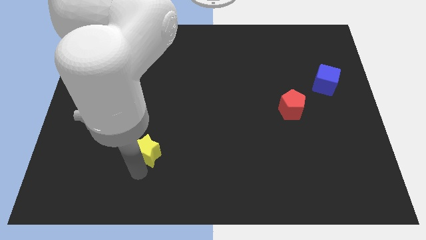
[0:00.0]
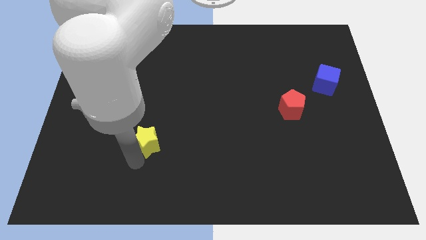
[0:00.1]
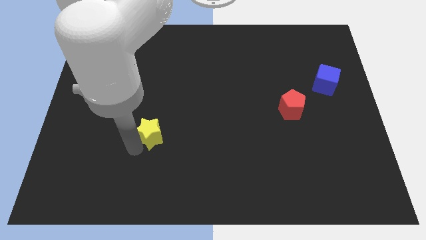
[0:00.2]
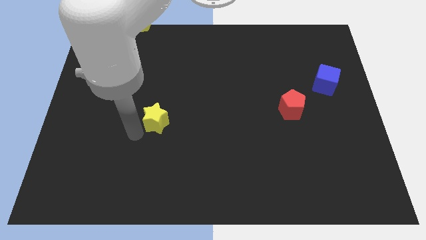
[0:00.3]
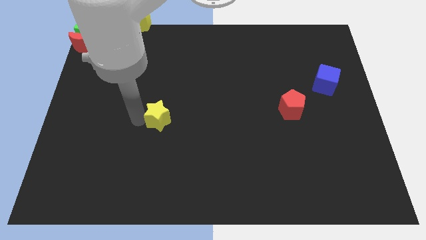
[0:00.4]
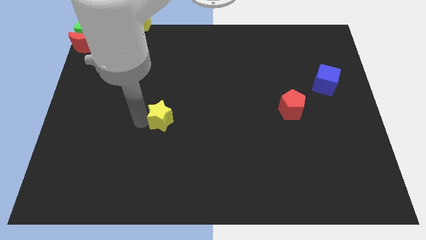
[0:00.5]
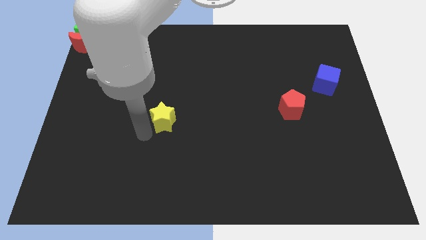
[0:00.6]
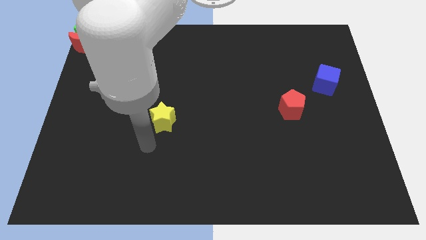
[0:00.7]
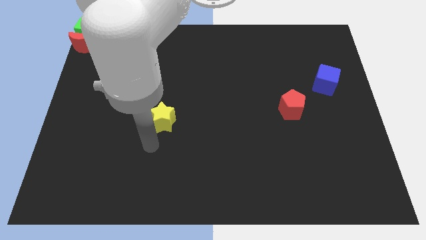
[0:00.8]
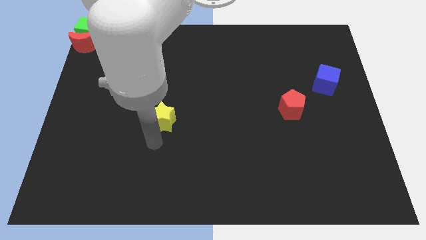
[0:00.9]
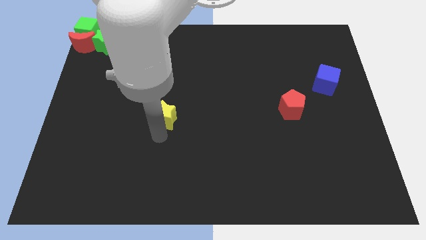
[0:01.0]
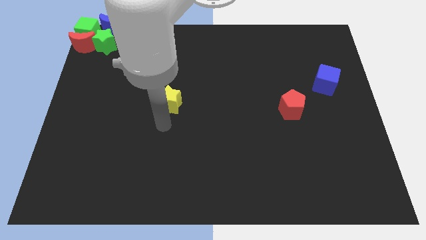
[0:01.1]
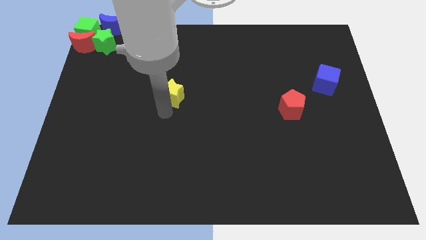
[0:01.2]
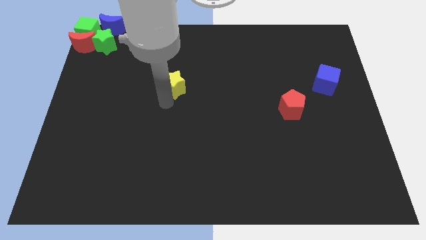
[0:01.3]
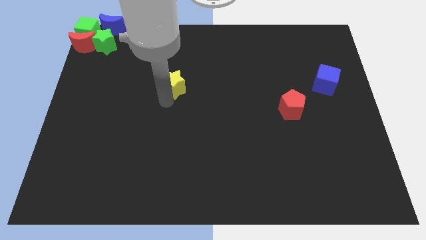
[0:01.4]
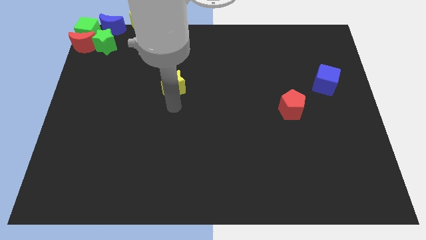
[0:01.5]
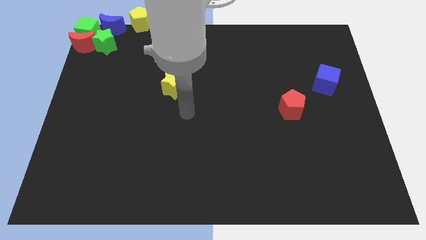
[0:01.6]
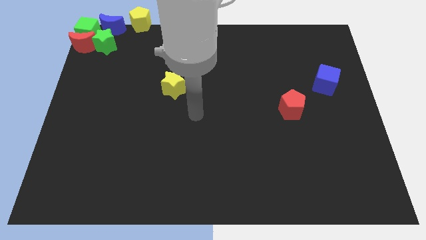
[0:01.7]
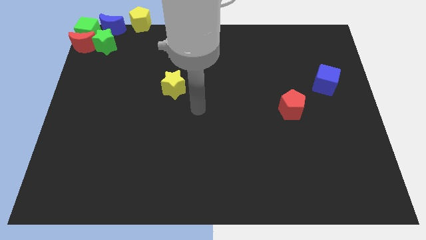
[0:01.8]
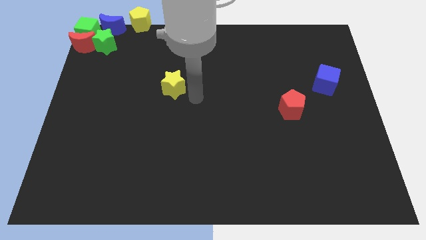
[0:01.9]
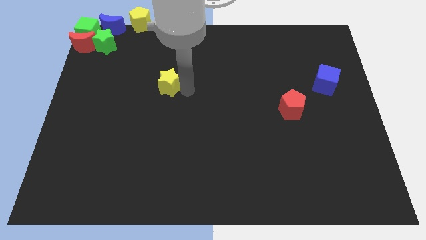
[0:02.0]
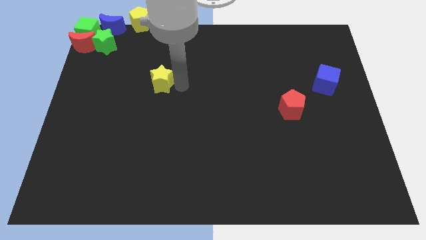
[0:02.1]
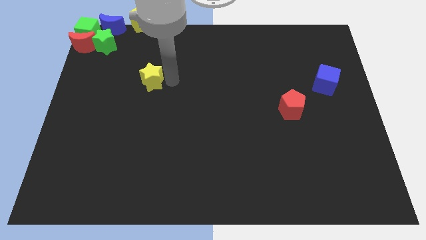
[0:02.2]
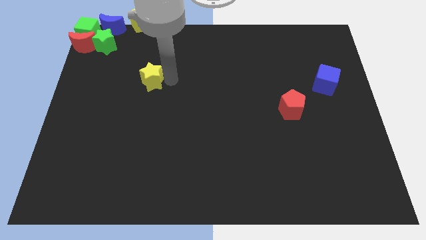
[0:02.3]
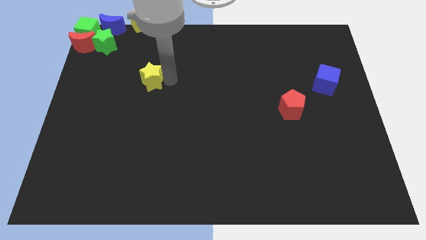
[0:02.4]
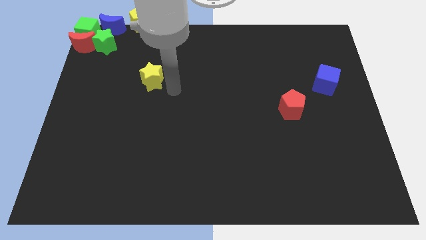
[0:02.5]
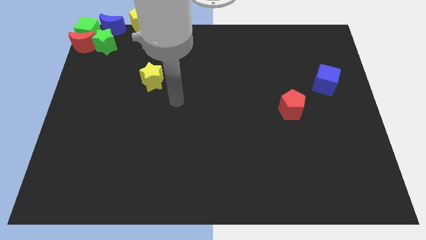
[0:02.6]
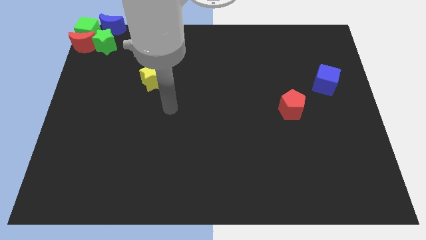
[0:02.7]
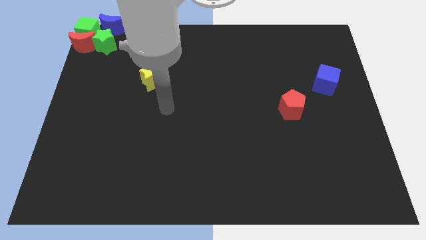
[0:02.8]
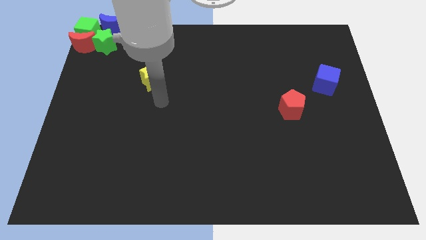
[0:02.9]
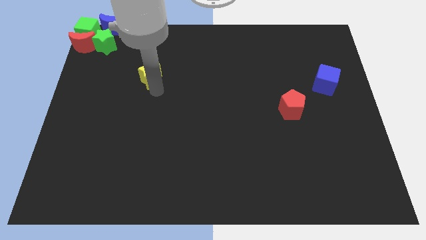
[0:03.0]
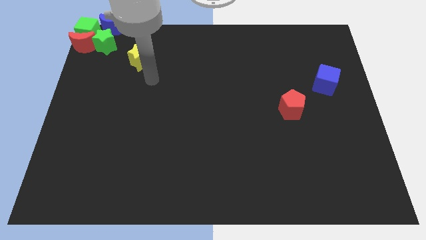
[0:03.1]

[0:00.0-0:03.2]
place yellow star below yellow pentagon

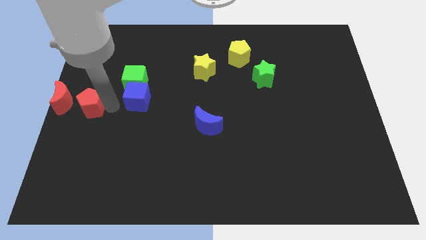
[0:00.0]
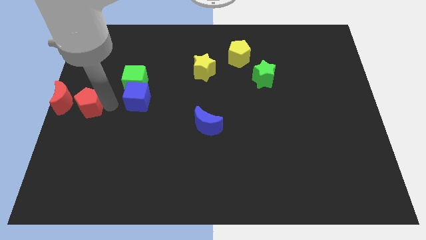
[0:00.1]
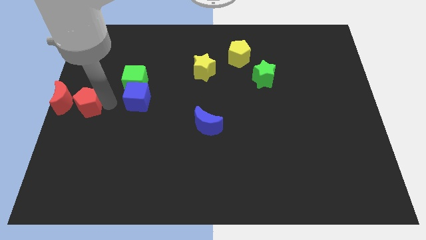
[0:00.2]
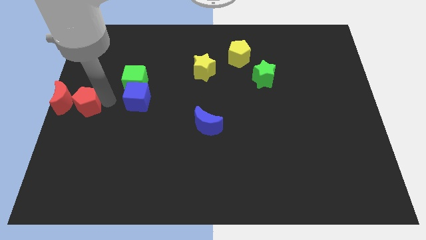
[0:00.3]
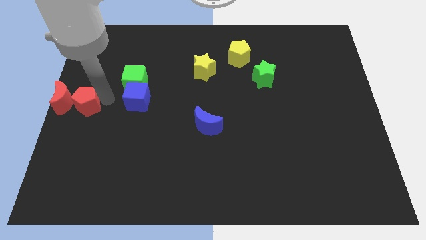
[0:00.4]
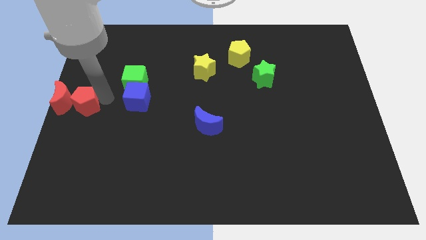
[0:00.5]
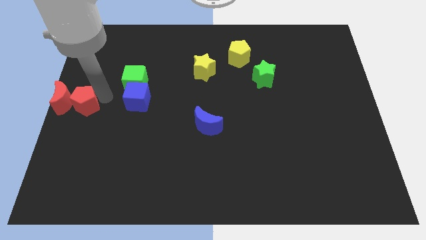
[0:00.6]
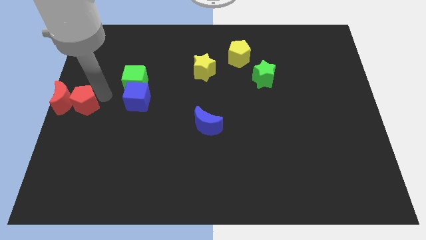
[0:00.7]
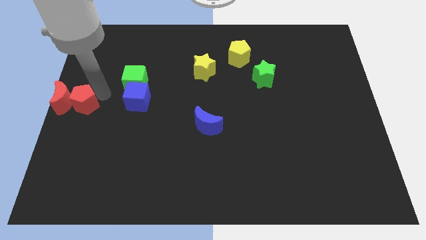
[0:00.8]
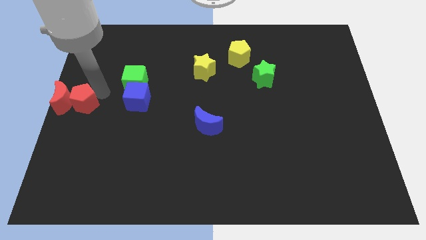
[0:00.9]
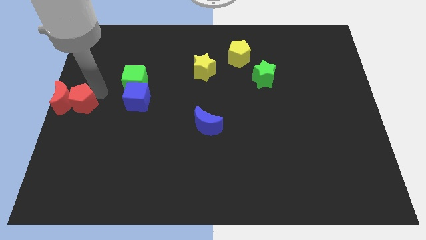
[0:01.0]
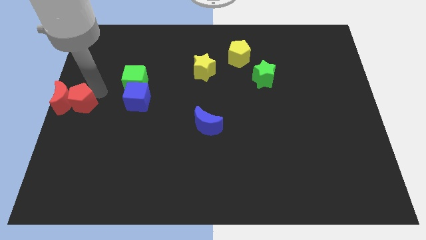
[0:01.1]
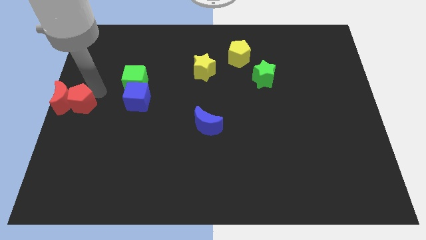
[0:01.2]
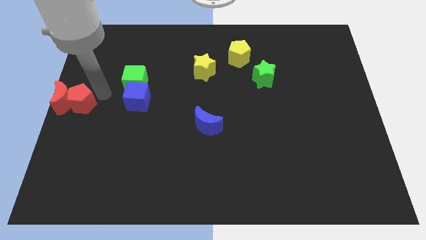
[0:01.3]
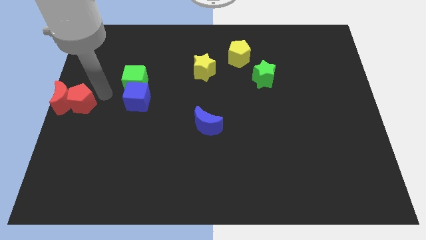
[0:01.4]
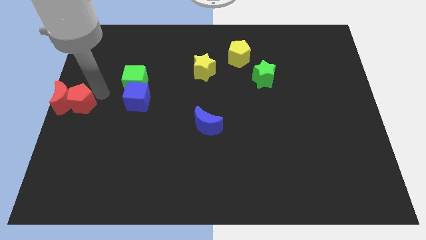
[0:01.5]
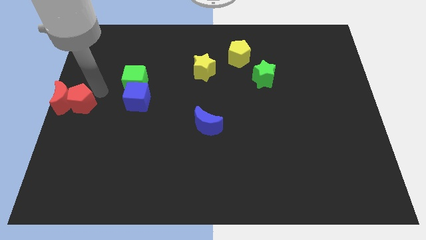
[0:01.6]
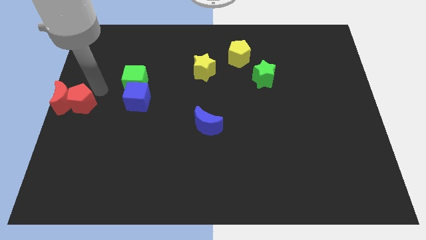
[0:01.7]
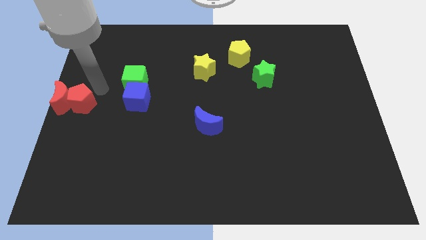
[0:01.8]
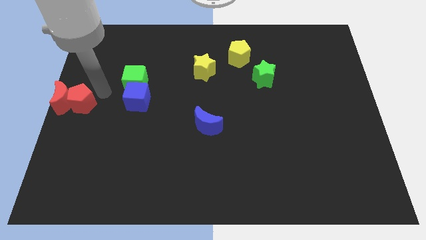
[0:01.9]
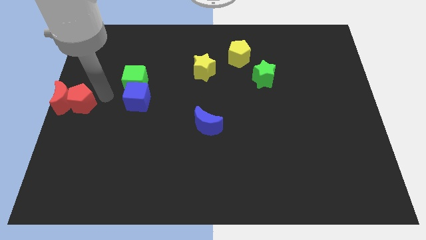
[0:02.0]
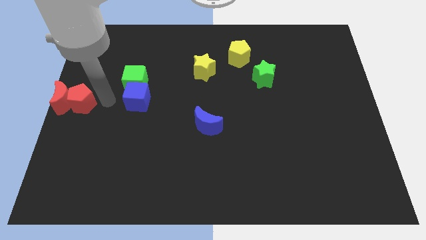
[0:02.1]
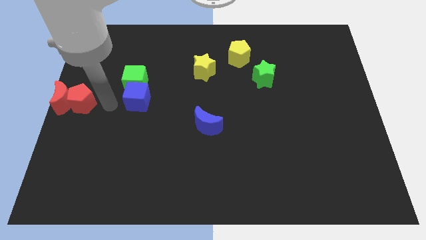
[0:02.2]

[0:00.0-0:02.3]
move red pentagon close to the red moon

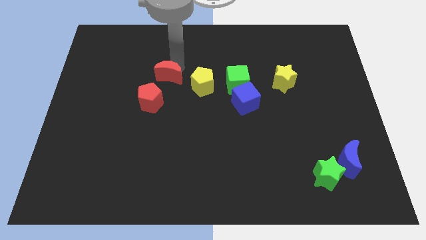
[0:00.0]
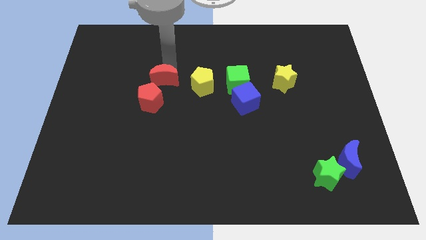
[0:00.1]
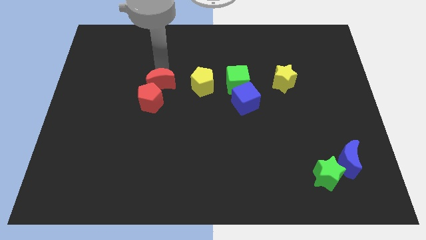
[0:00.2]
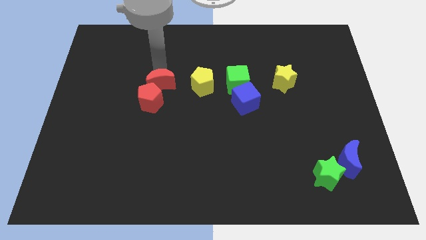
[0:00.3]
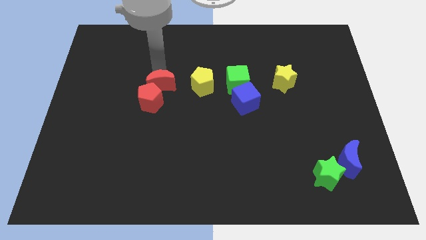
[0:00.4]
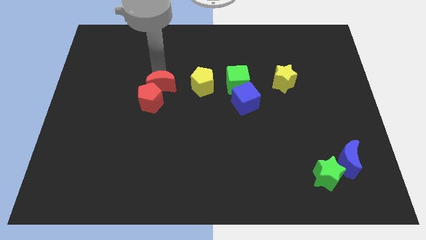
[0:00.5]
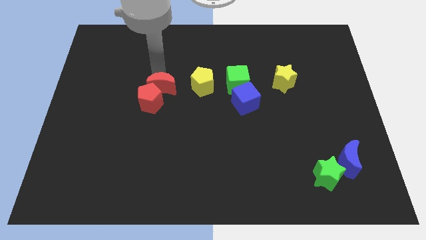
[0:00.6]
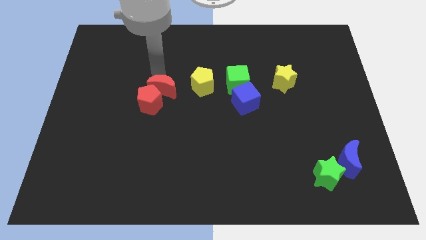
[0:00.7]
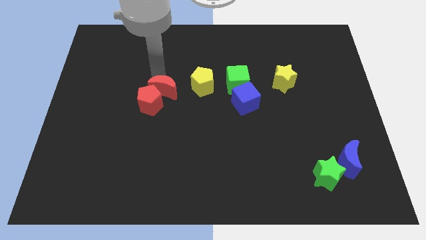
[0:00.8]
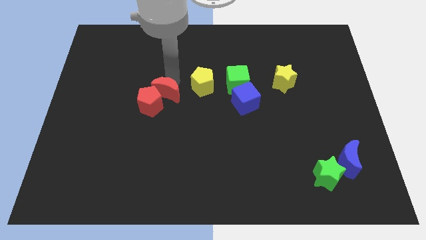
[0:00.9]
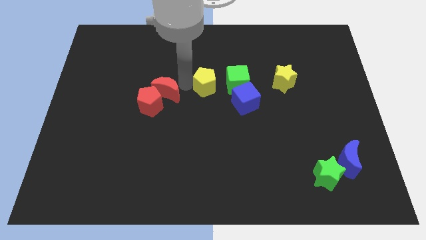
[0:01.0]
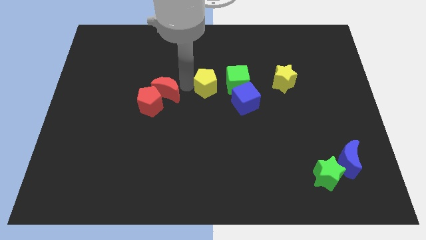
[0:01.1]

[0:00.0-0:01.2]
place the red crescent into the red pentagon

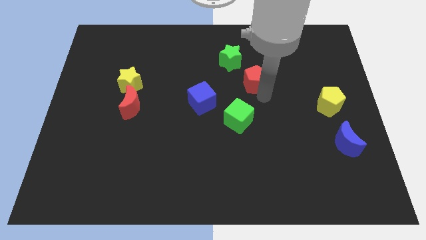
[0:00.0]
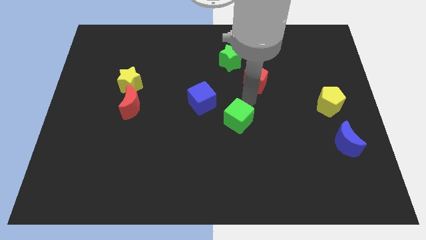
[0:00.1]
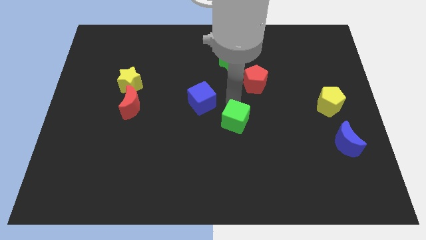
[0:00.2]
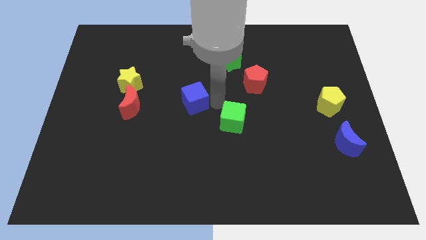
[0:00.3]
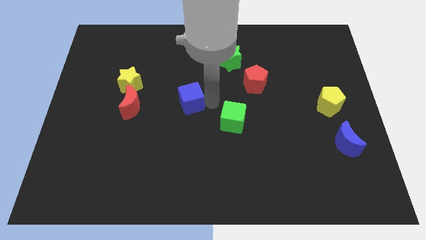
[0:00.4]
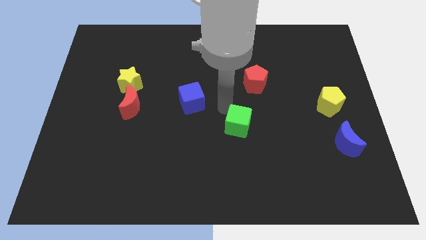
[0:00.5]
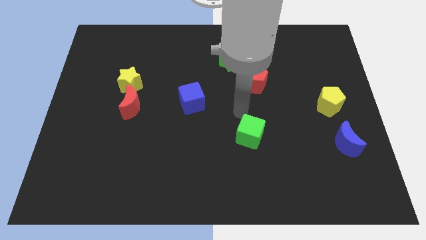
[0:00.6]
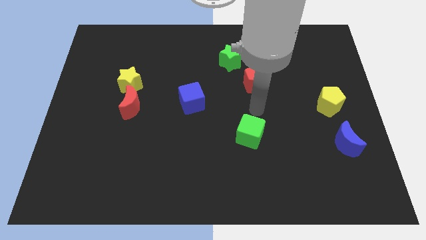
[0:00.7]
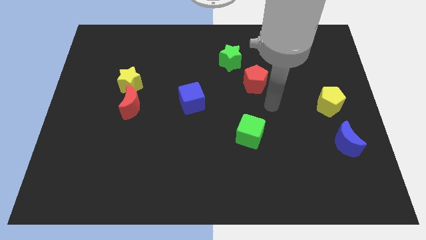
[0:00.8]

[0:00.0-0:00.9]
put the green cube below the red pentagon

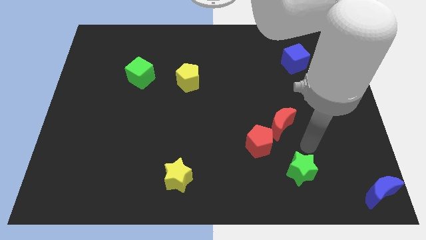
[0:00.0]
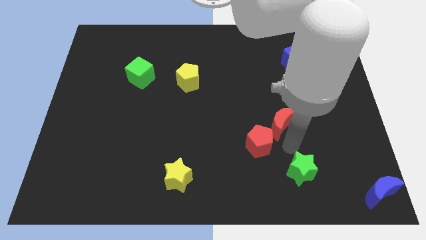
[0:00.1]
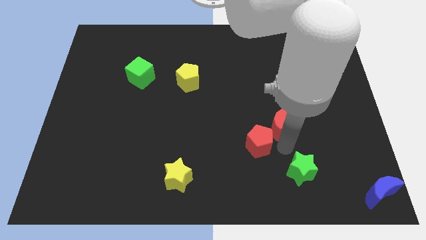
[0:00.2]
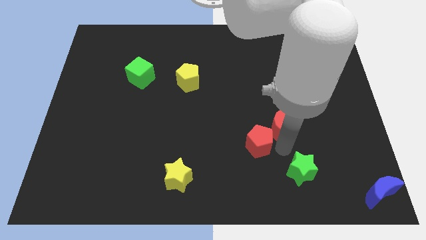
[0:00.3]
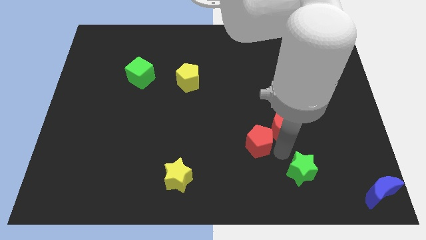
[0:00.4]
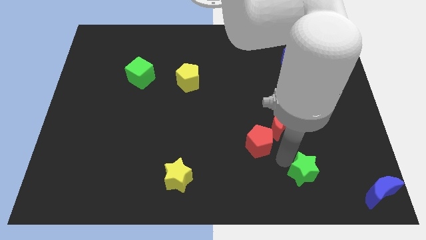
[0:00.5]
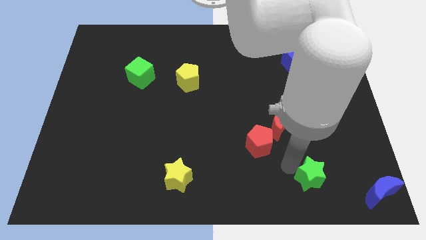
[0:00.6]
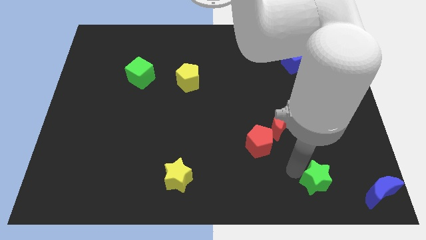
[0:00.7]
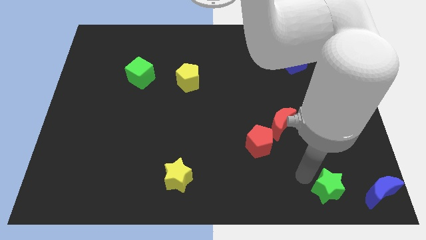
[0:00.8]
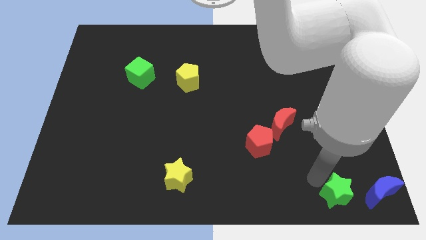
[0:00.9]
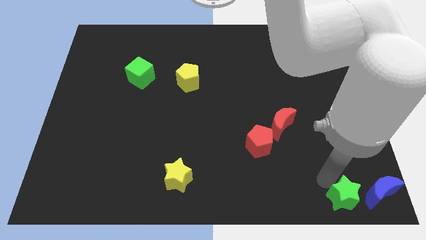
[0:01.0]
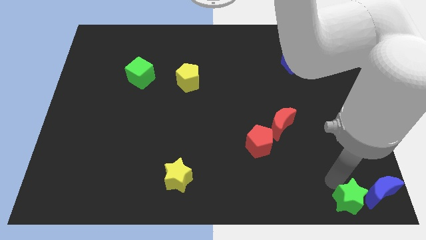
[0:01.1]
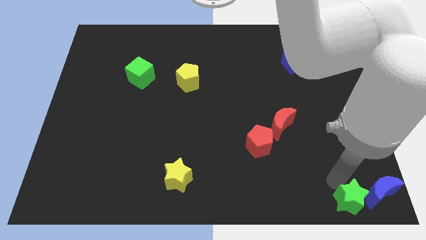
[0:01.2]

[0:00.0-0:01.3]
move the green star to the left of the blue crescent

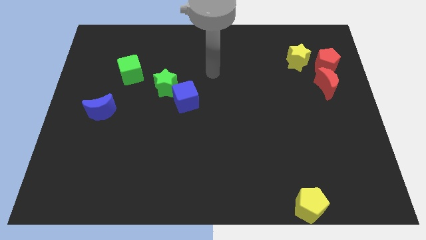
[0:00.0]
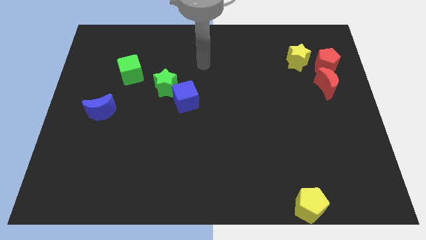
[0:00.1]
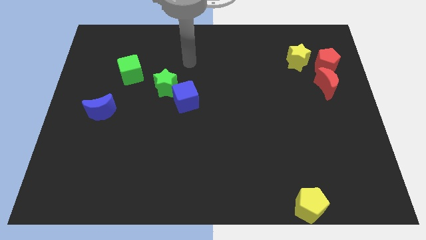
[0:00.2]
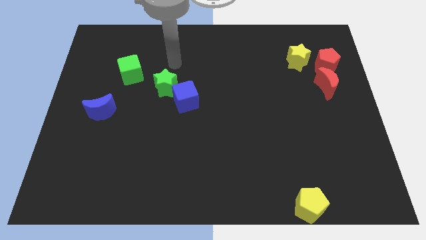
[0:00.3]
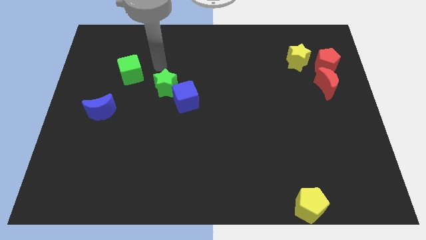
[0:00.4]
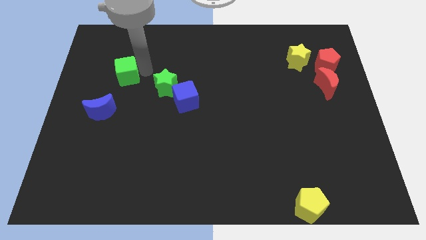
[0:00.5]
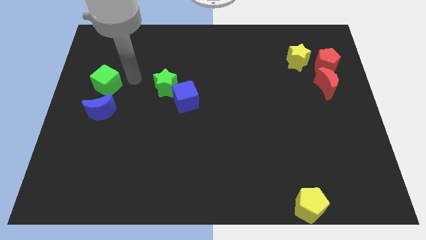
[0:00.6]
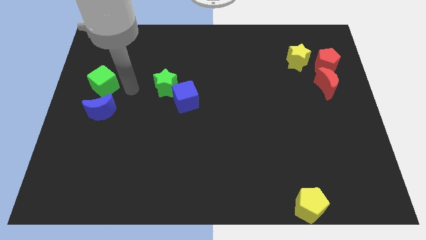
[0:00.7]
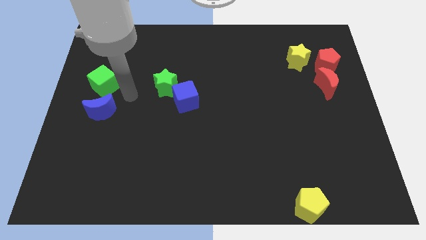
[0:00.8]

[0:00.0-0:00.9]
push green cube towards blue crescent
